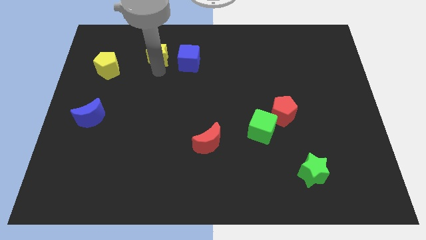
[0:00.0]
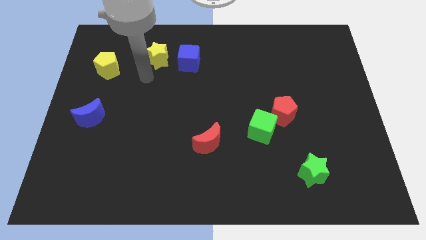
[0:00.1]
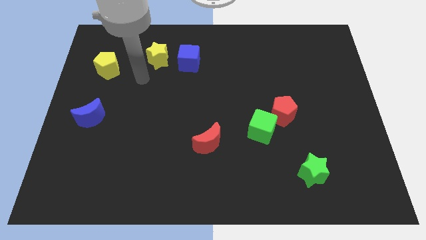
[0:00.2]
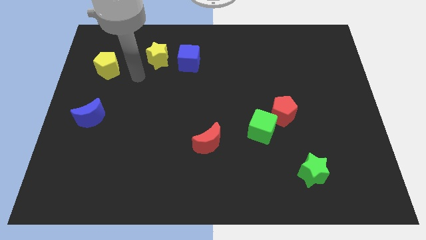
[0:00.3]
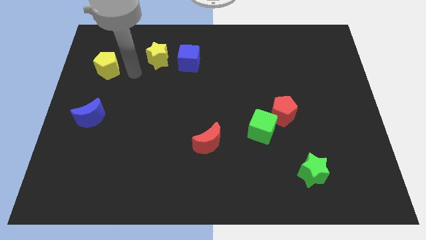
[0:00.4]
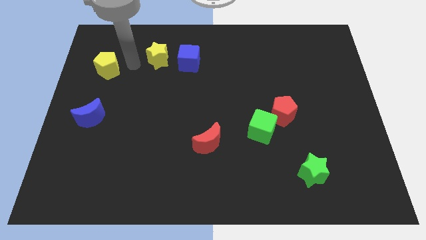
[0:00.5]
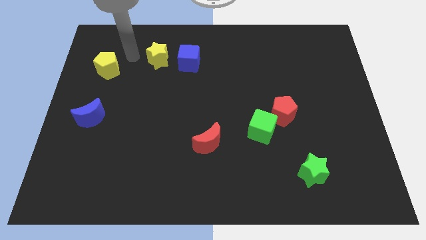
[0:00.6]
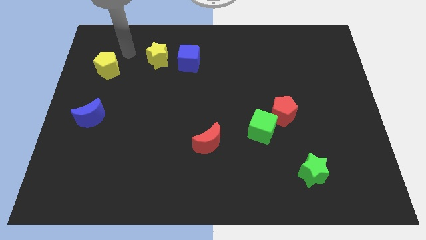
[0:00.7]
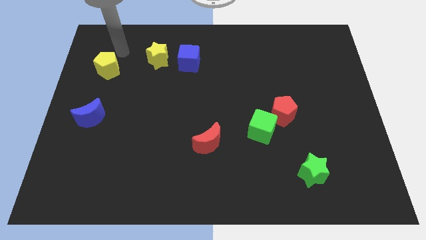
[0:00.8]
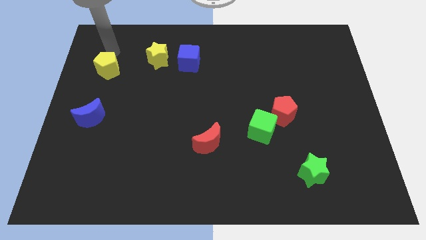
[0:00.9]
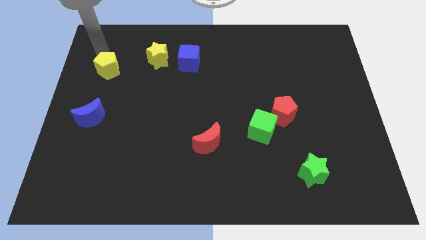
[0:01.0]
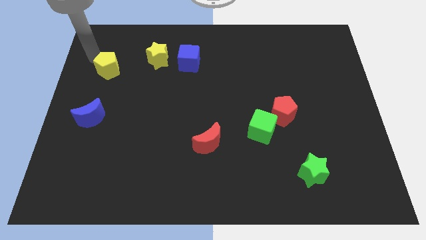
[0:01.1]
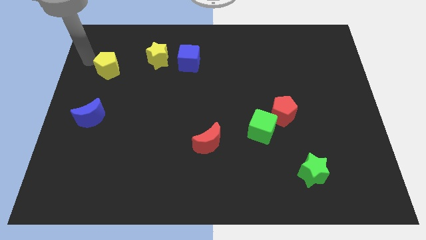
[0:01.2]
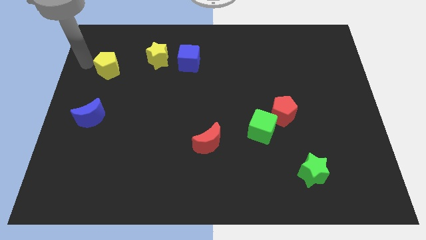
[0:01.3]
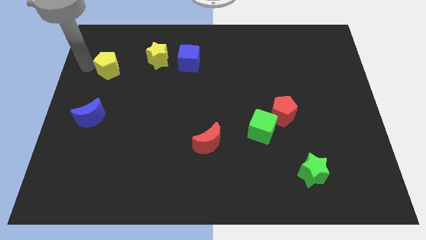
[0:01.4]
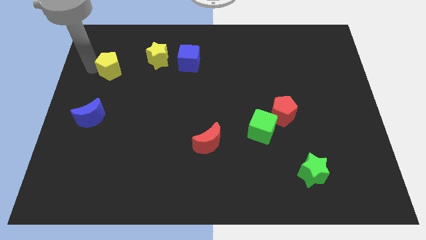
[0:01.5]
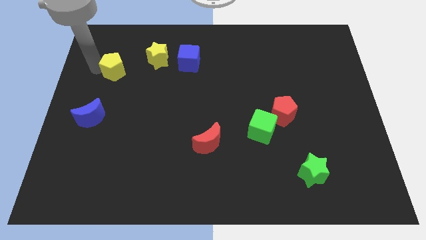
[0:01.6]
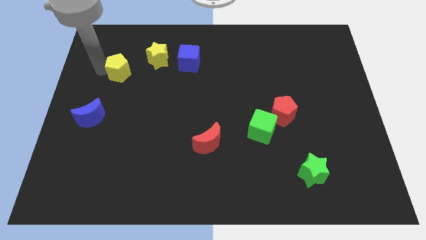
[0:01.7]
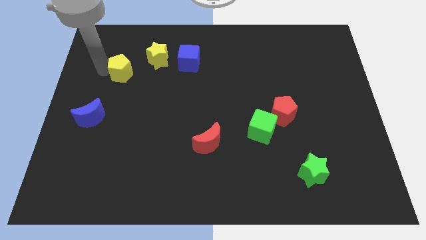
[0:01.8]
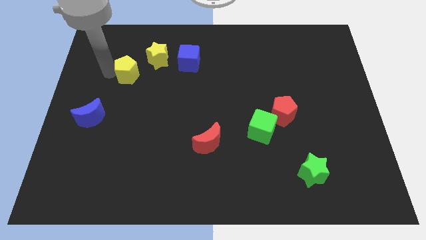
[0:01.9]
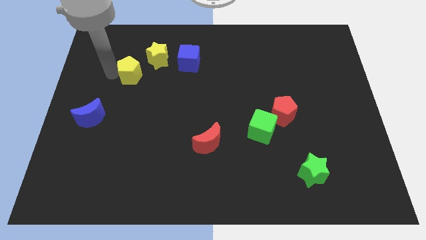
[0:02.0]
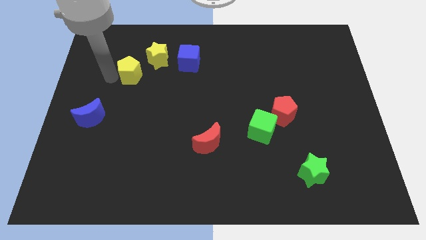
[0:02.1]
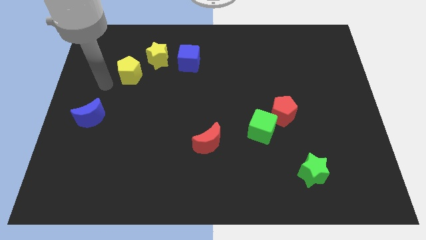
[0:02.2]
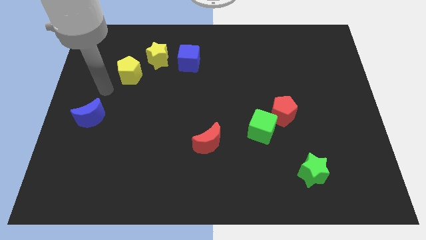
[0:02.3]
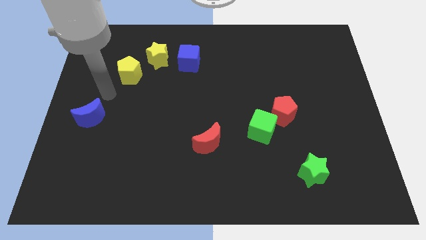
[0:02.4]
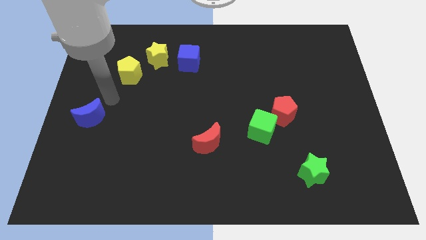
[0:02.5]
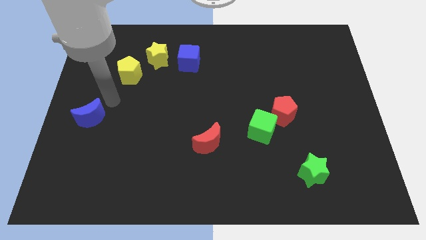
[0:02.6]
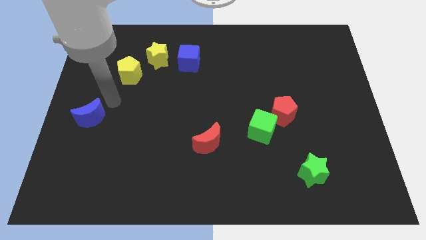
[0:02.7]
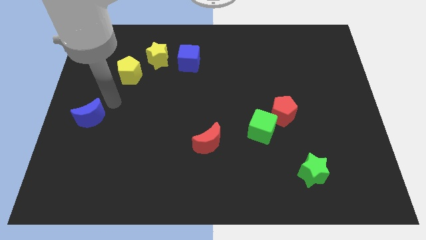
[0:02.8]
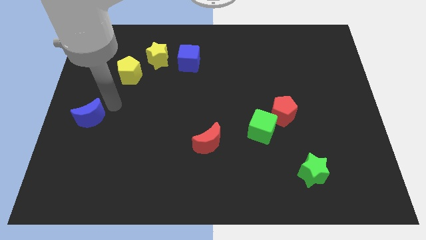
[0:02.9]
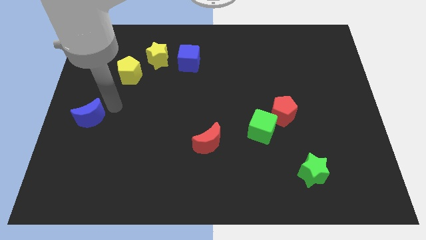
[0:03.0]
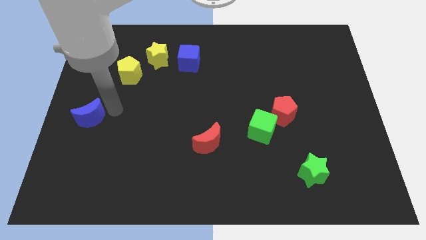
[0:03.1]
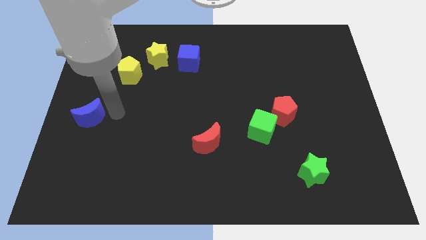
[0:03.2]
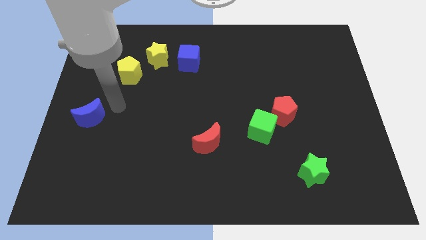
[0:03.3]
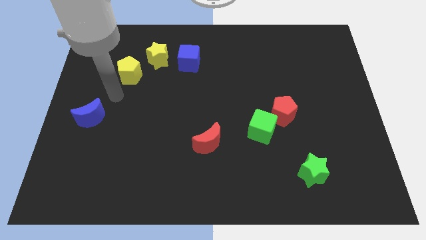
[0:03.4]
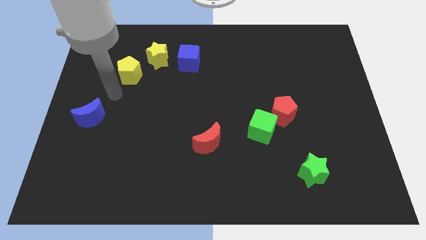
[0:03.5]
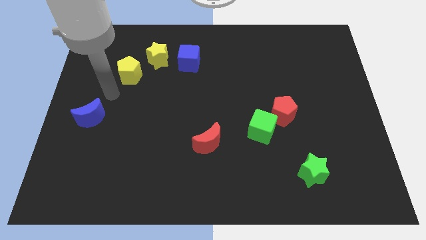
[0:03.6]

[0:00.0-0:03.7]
slide the yellow pentagon to the bottom left of the yellow star

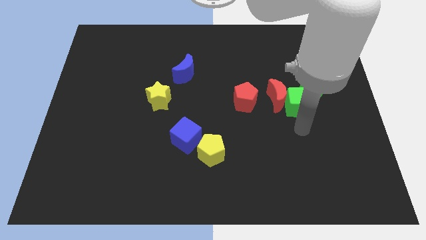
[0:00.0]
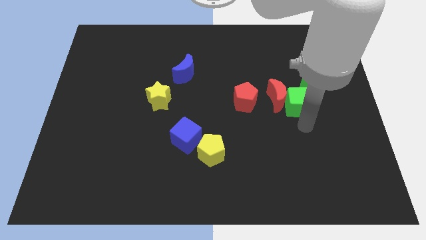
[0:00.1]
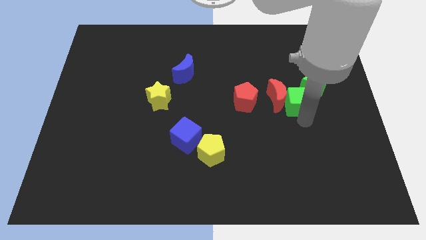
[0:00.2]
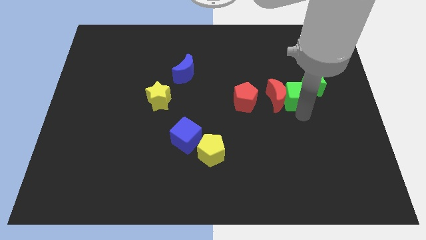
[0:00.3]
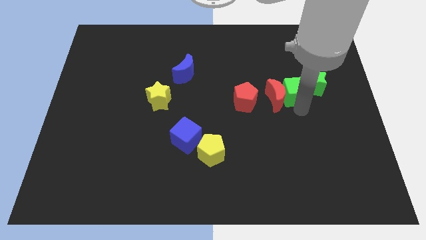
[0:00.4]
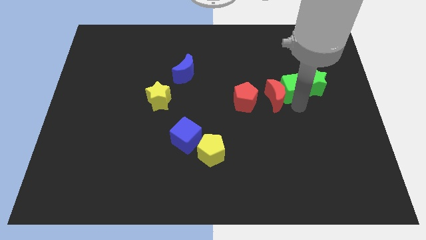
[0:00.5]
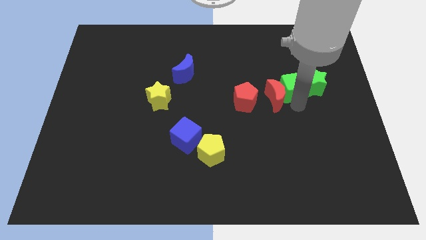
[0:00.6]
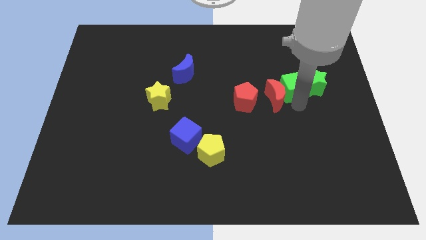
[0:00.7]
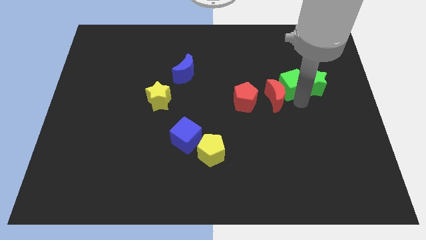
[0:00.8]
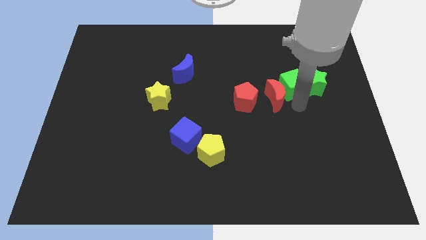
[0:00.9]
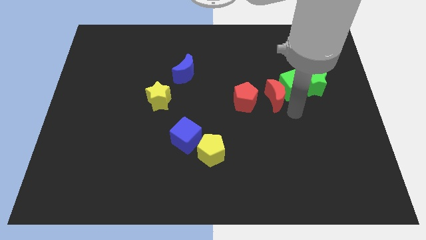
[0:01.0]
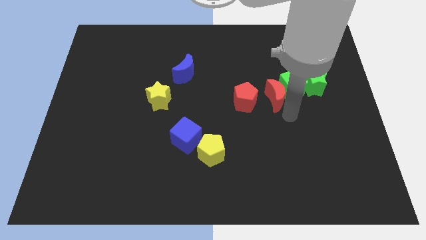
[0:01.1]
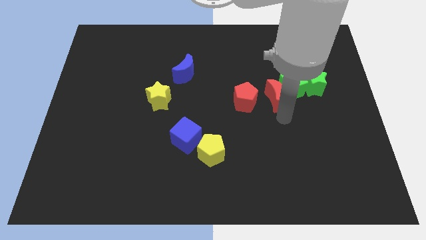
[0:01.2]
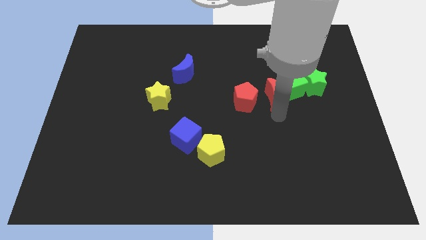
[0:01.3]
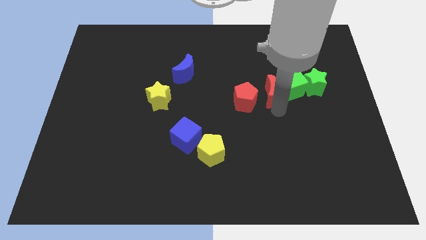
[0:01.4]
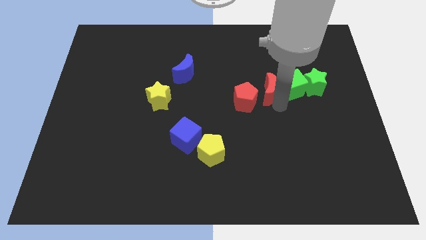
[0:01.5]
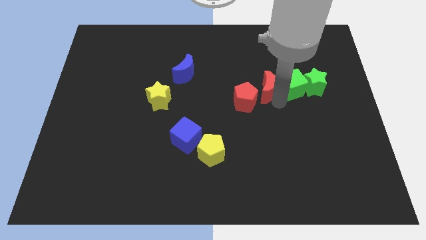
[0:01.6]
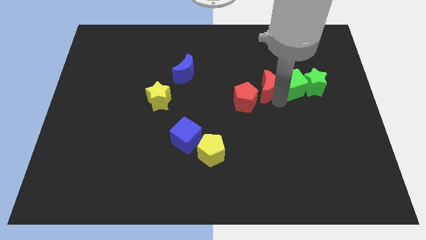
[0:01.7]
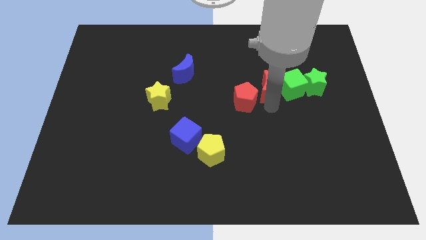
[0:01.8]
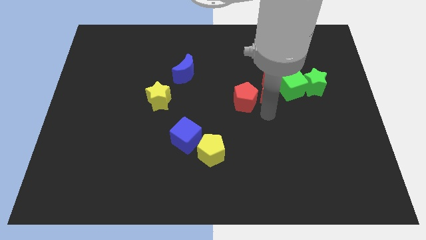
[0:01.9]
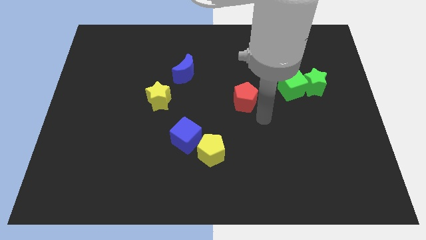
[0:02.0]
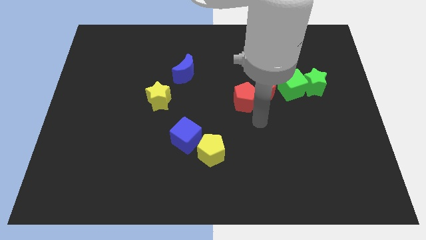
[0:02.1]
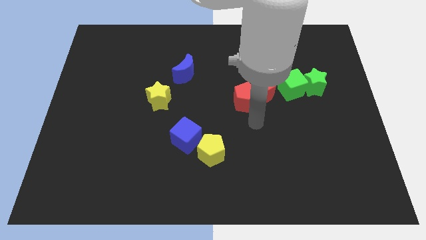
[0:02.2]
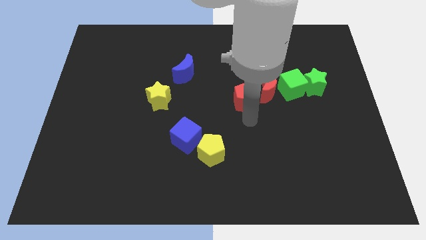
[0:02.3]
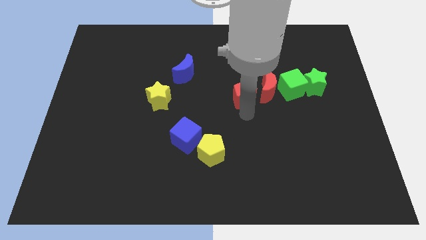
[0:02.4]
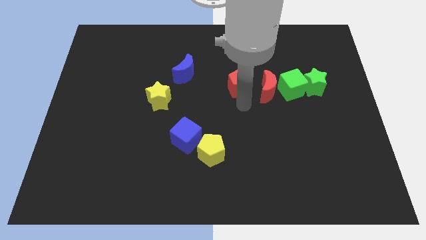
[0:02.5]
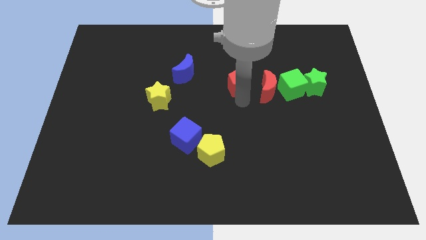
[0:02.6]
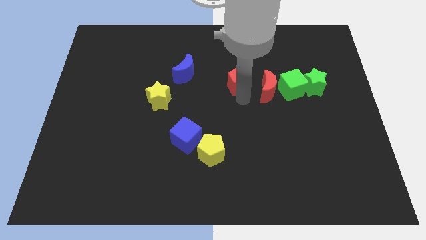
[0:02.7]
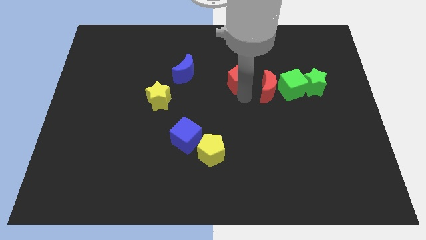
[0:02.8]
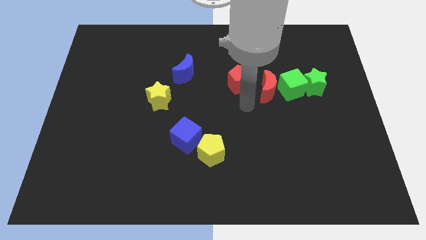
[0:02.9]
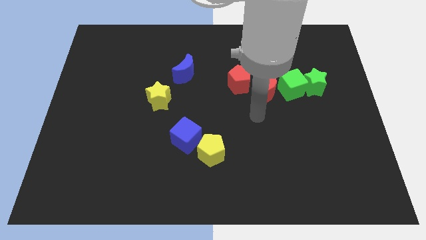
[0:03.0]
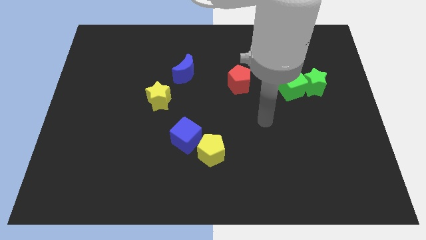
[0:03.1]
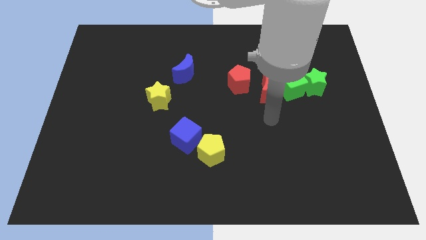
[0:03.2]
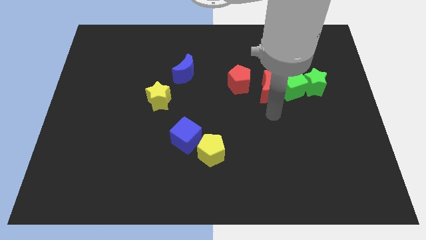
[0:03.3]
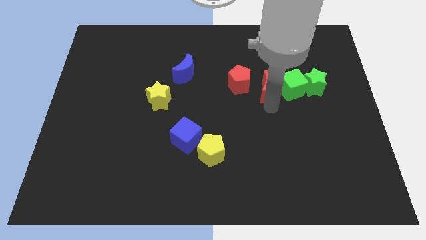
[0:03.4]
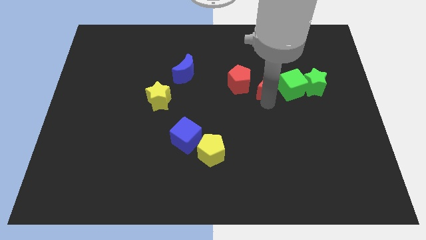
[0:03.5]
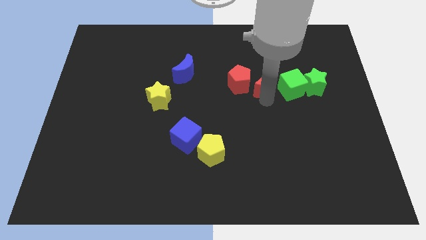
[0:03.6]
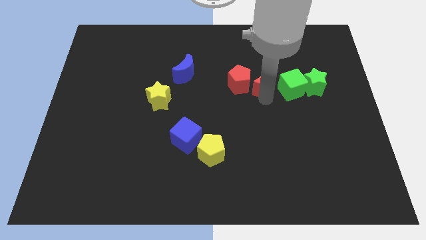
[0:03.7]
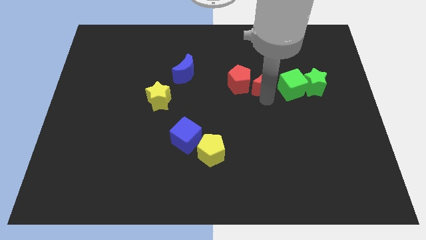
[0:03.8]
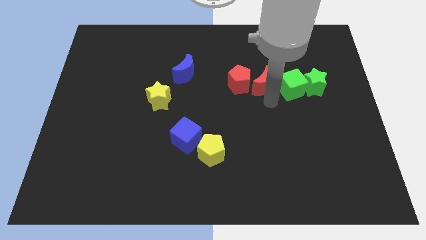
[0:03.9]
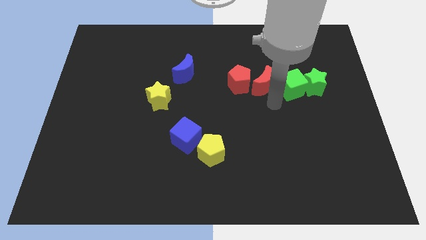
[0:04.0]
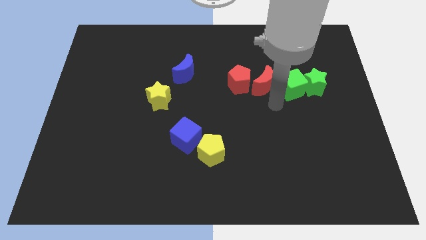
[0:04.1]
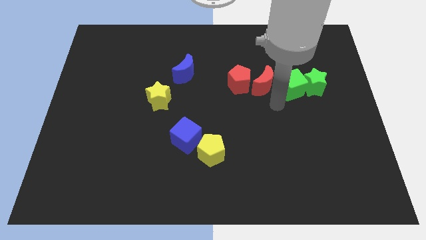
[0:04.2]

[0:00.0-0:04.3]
arrange a group of blocks in a line

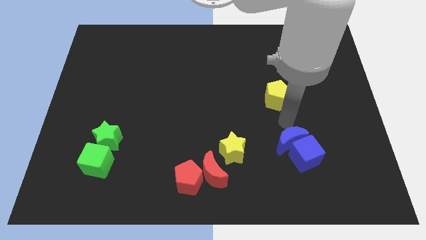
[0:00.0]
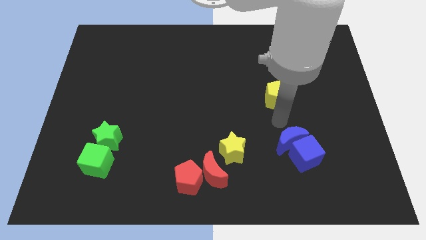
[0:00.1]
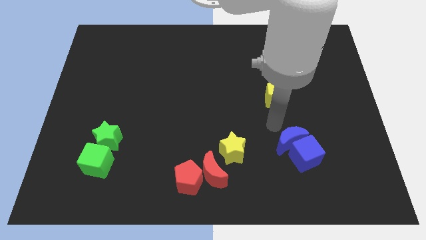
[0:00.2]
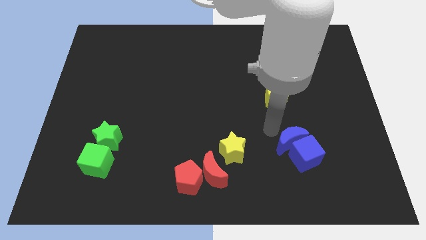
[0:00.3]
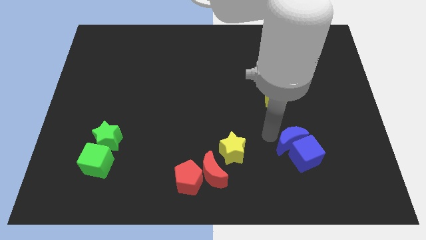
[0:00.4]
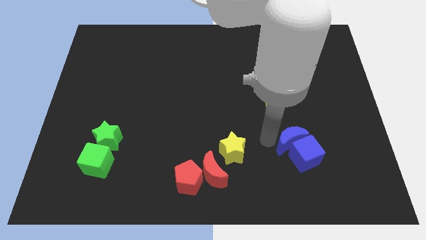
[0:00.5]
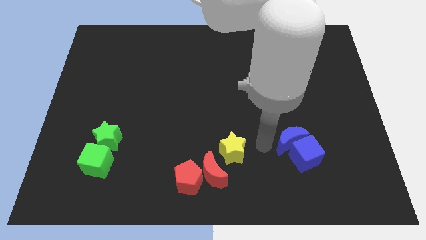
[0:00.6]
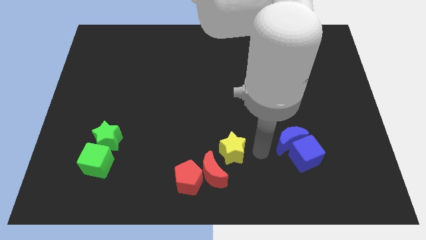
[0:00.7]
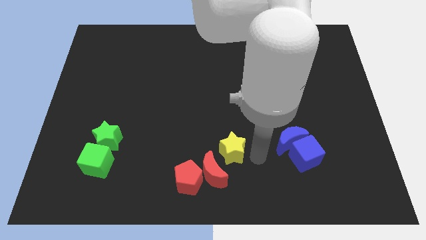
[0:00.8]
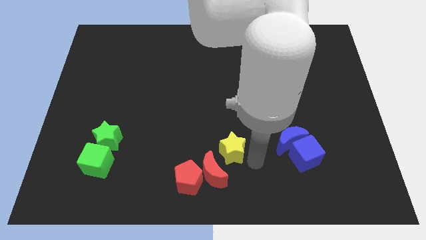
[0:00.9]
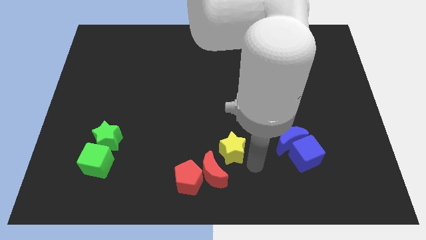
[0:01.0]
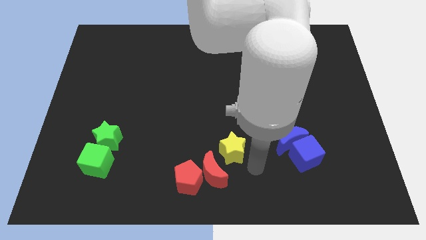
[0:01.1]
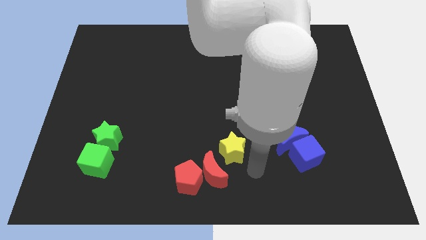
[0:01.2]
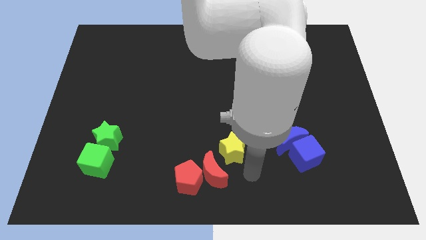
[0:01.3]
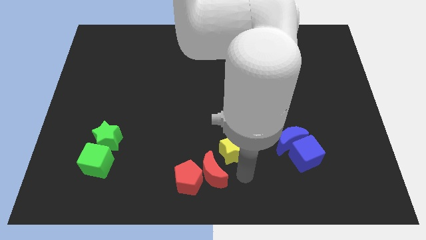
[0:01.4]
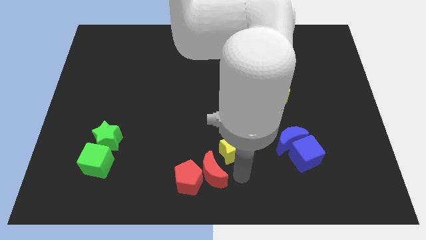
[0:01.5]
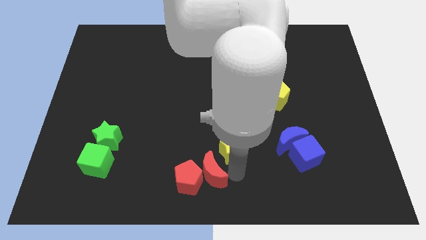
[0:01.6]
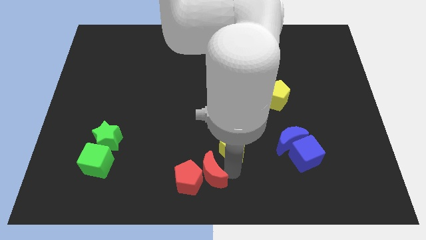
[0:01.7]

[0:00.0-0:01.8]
move away from the blue moon
